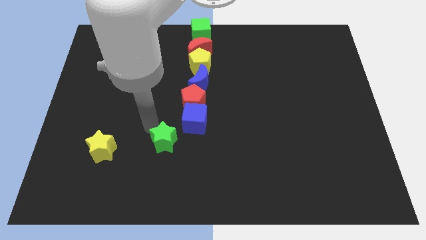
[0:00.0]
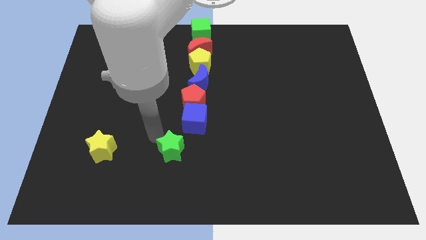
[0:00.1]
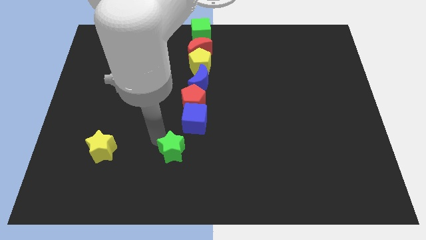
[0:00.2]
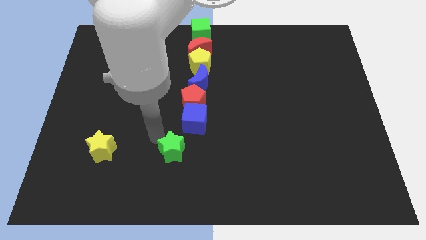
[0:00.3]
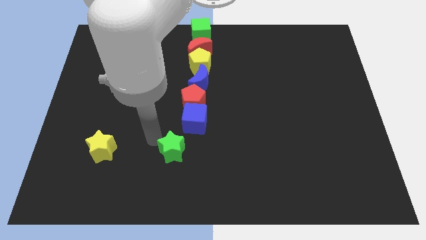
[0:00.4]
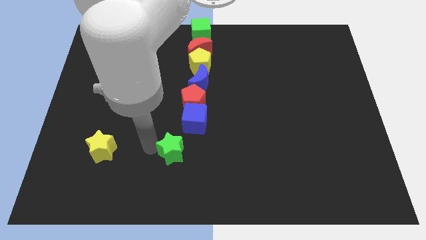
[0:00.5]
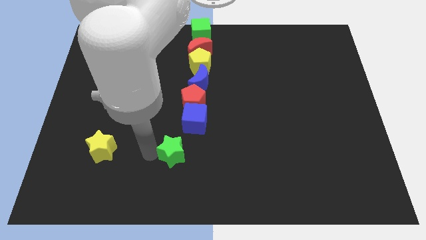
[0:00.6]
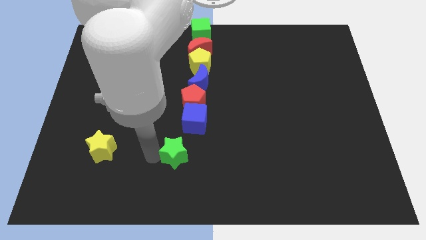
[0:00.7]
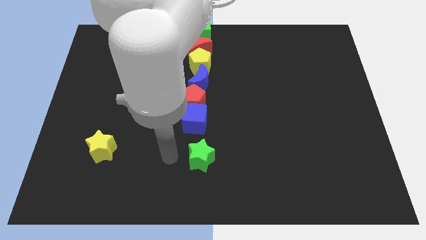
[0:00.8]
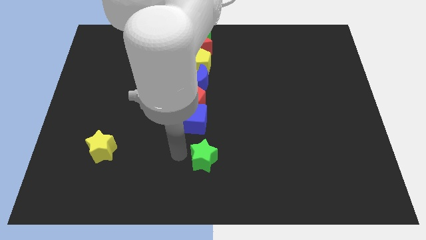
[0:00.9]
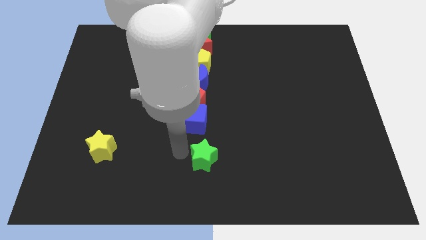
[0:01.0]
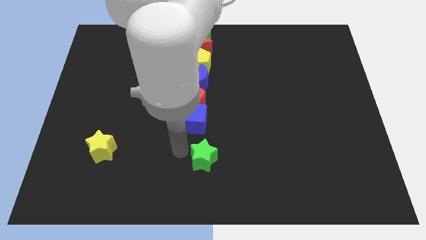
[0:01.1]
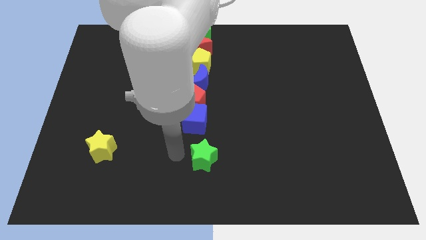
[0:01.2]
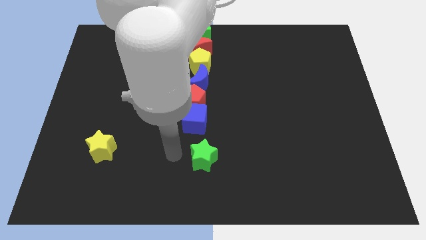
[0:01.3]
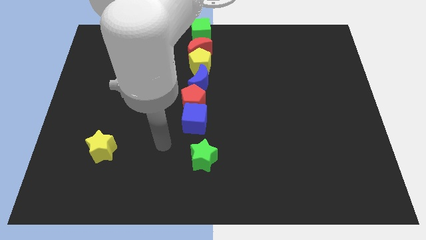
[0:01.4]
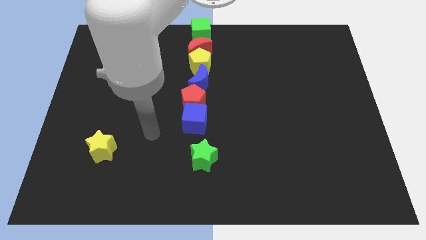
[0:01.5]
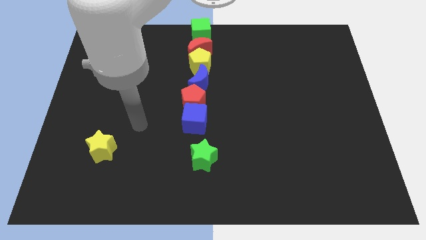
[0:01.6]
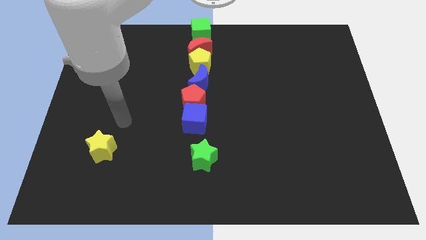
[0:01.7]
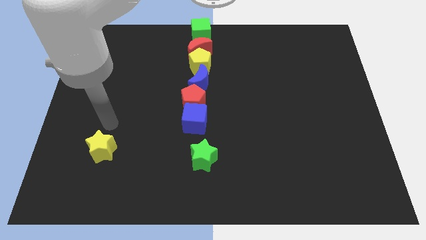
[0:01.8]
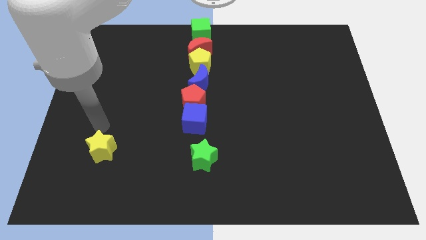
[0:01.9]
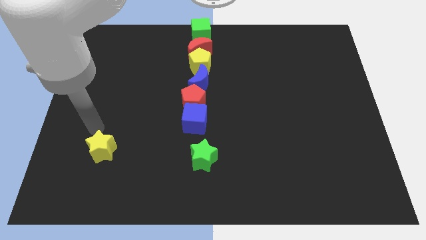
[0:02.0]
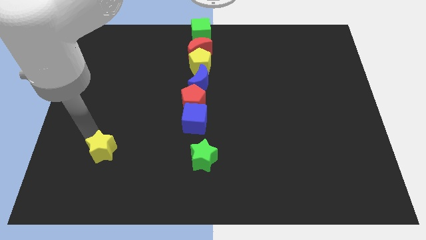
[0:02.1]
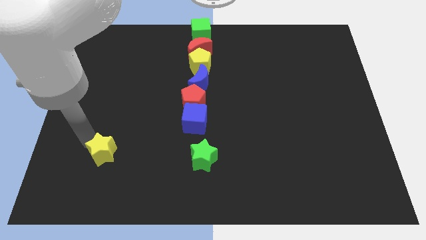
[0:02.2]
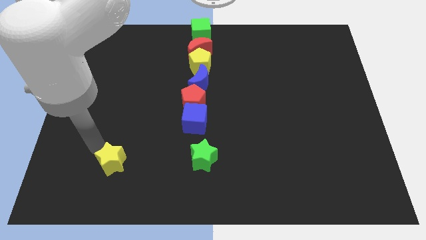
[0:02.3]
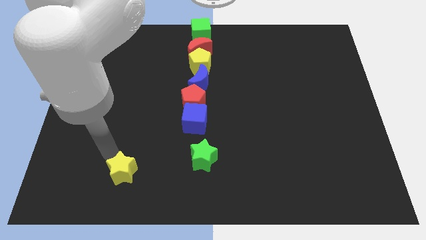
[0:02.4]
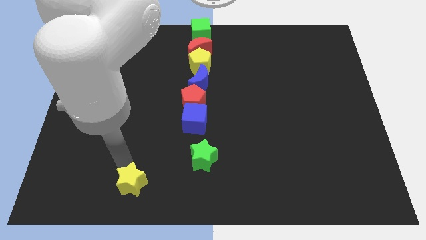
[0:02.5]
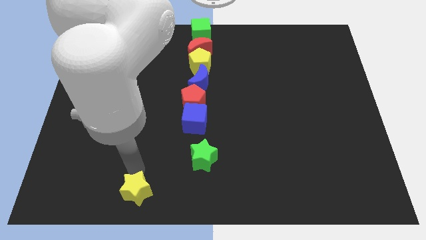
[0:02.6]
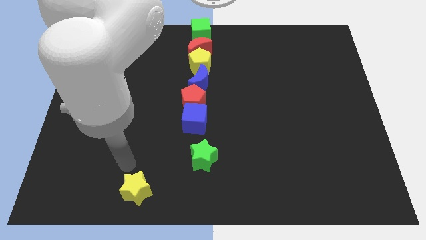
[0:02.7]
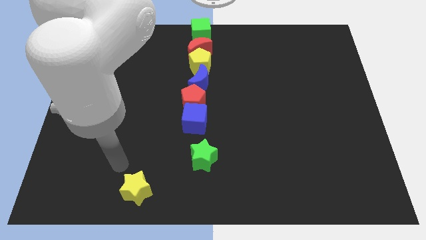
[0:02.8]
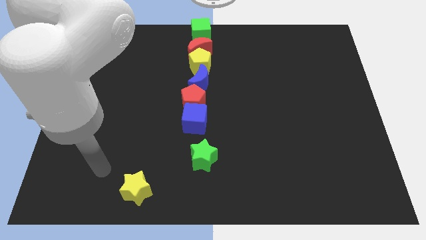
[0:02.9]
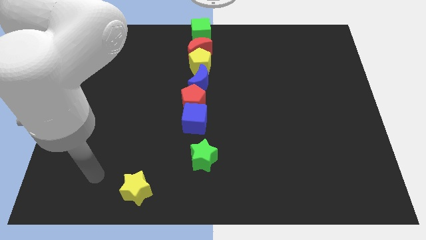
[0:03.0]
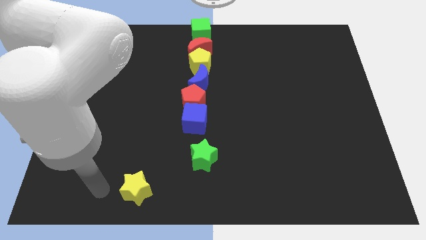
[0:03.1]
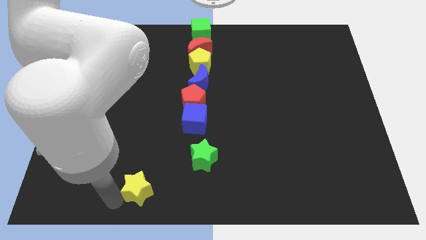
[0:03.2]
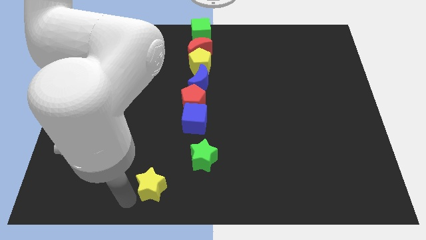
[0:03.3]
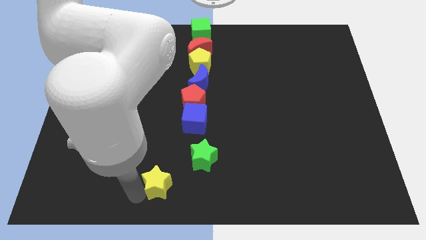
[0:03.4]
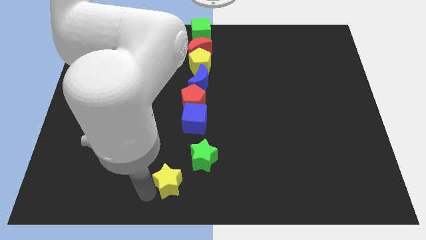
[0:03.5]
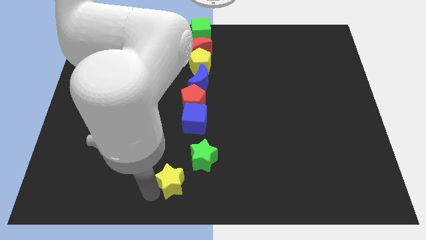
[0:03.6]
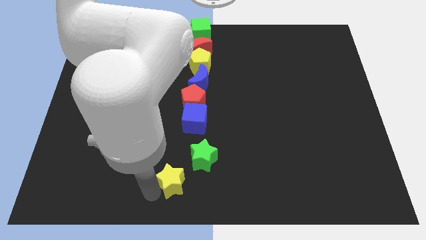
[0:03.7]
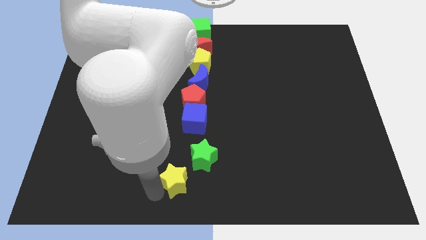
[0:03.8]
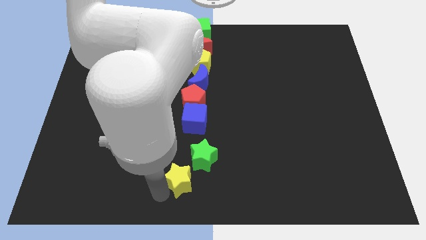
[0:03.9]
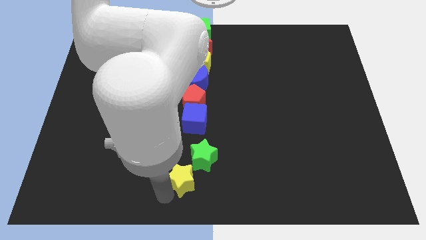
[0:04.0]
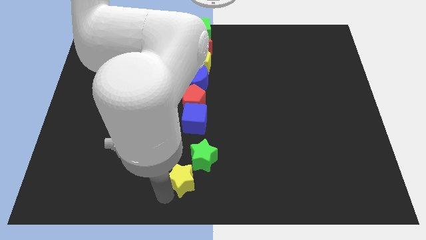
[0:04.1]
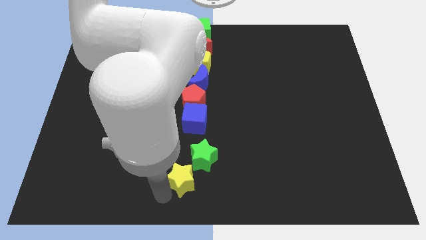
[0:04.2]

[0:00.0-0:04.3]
move the green star and yellow star towards right

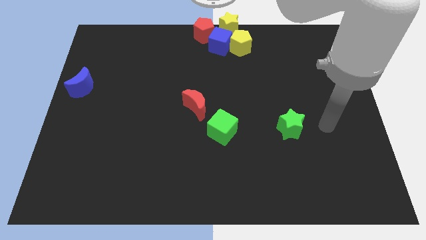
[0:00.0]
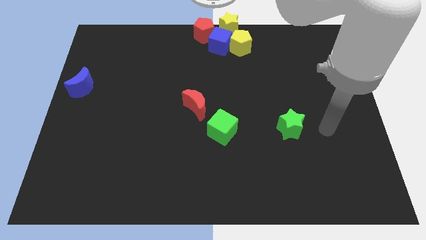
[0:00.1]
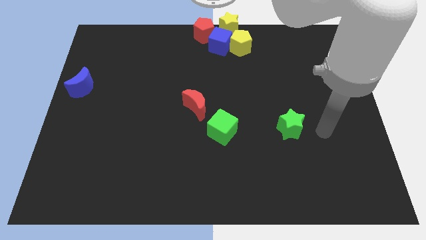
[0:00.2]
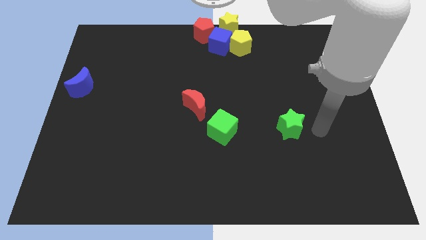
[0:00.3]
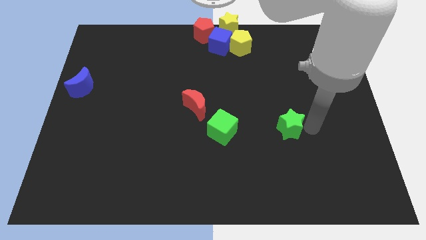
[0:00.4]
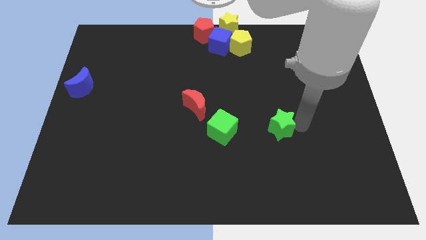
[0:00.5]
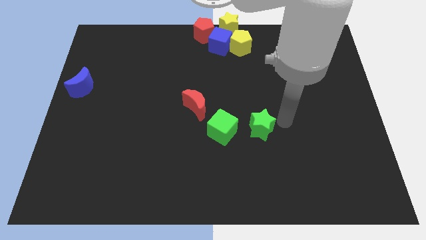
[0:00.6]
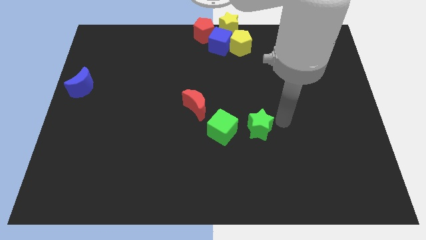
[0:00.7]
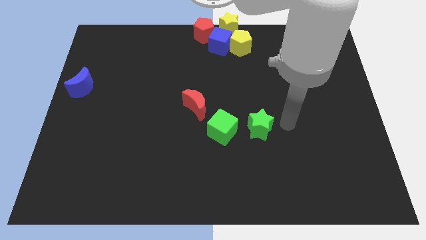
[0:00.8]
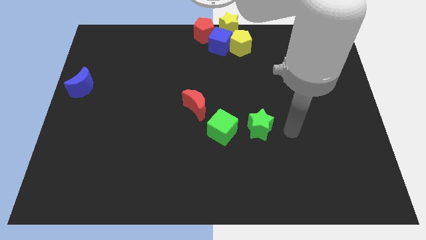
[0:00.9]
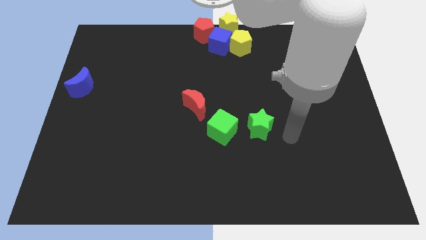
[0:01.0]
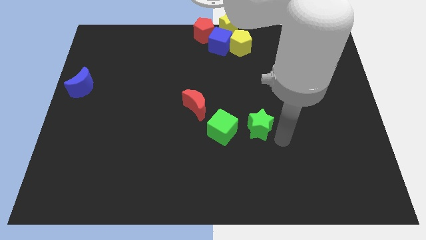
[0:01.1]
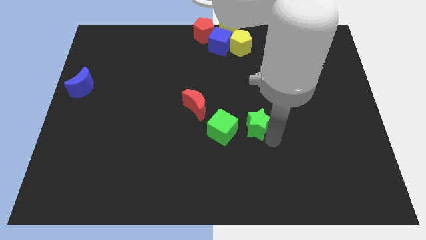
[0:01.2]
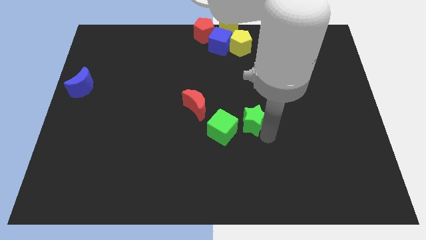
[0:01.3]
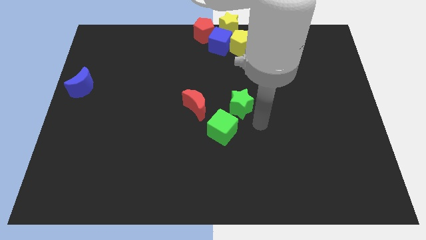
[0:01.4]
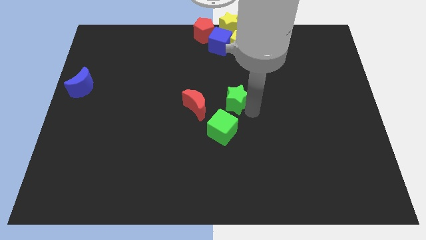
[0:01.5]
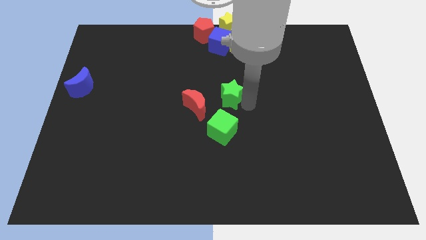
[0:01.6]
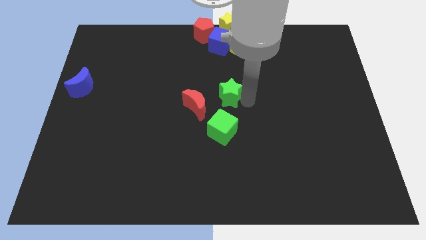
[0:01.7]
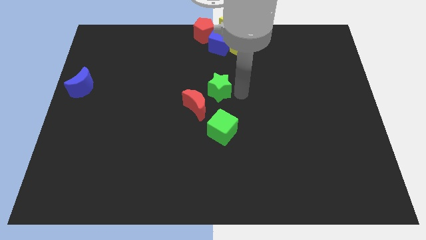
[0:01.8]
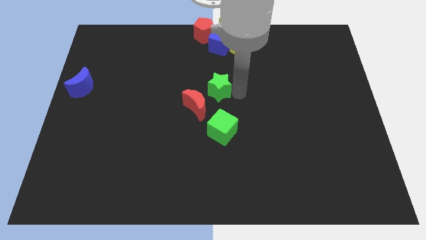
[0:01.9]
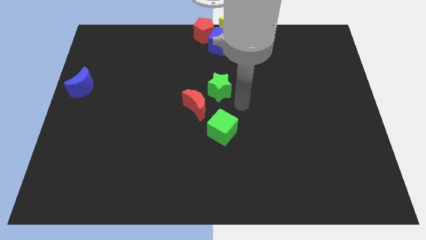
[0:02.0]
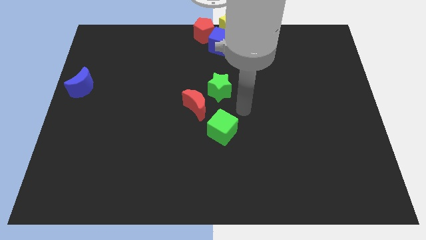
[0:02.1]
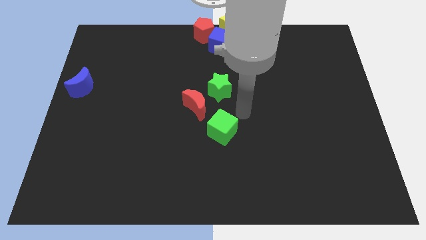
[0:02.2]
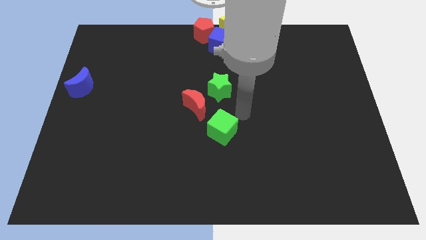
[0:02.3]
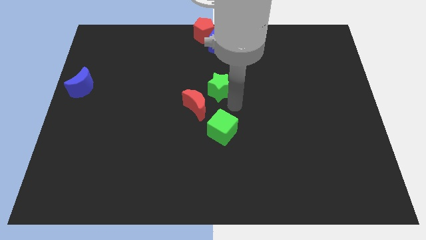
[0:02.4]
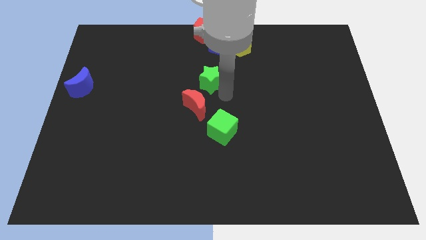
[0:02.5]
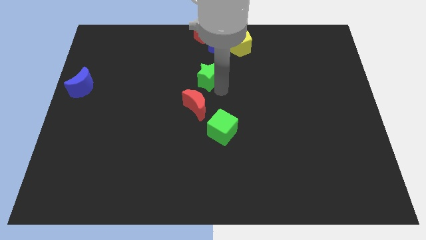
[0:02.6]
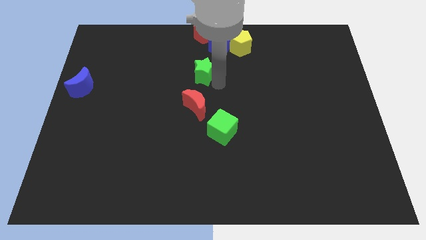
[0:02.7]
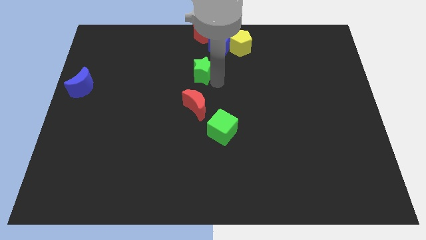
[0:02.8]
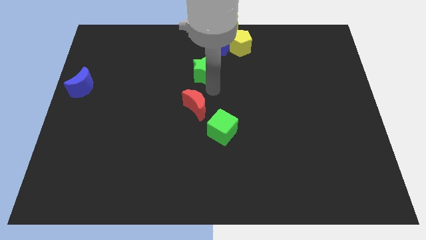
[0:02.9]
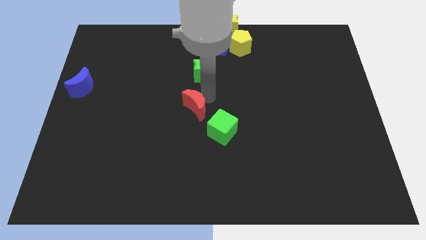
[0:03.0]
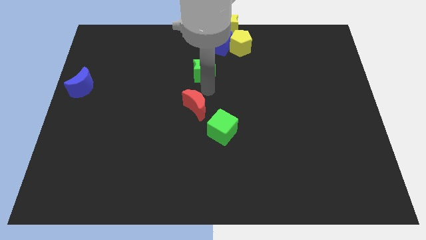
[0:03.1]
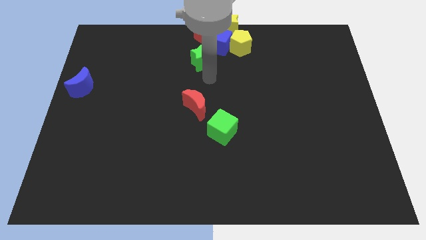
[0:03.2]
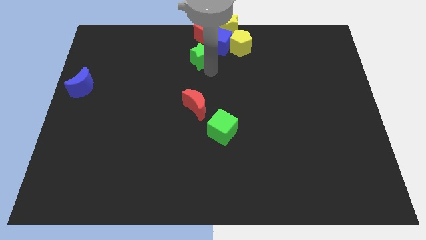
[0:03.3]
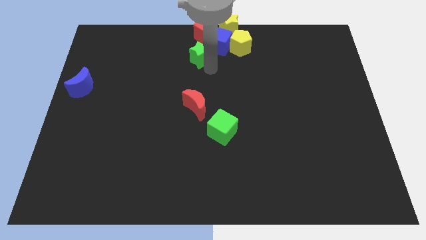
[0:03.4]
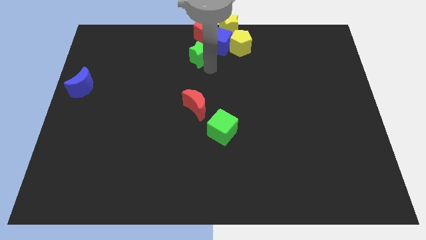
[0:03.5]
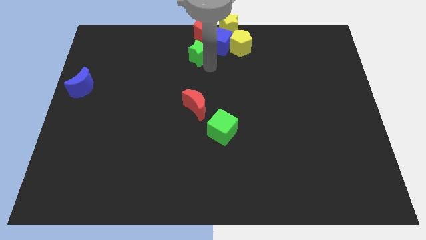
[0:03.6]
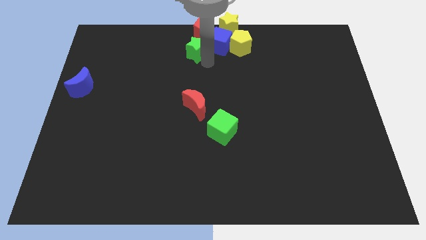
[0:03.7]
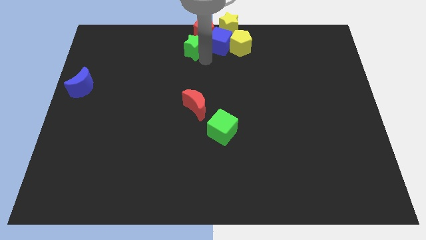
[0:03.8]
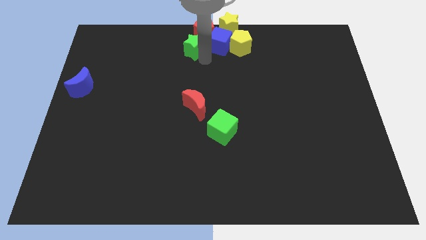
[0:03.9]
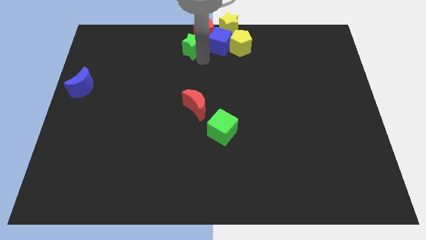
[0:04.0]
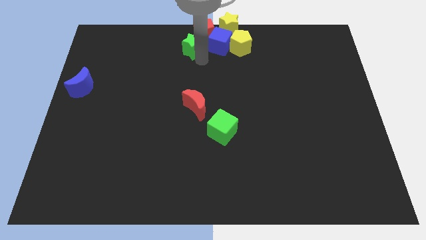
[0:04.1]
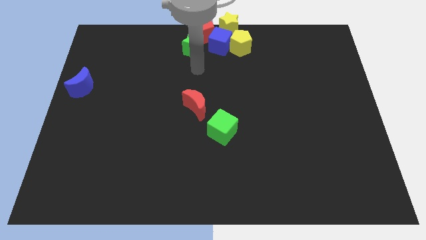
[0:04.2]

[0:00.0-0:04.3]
push the green star to the bottom side of the red pentagon

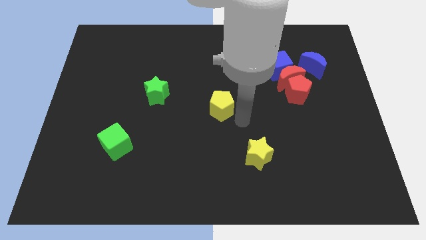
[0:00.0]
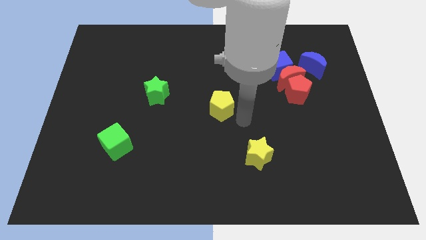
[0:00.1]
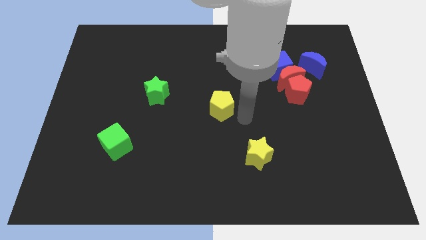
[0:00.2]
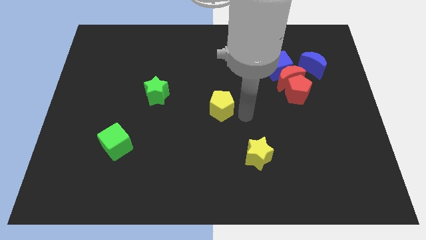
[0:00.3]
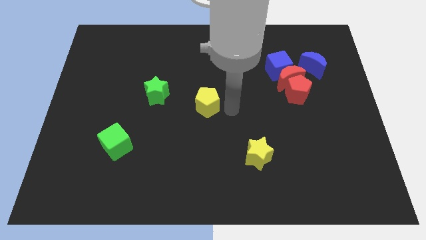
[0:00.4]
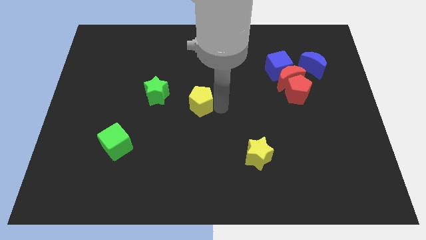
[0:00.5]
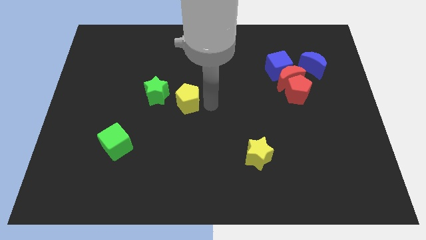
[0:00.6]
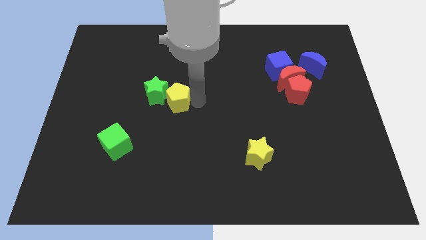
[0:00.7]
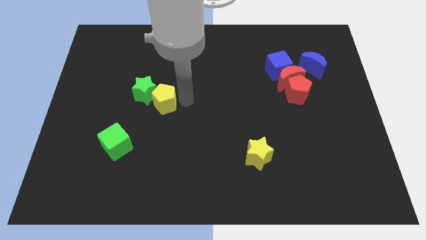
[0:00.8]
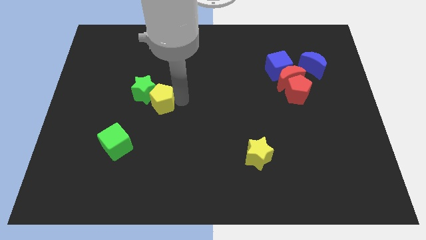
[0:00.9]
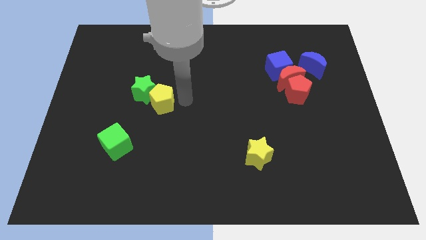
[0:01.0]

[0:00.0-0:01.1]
move the yellow pentagon into green star
